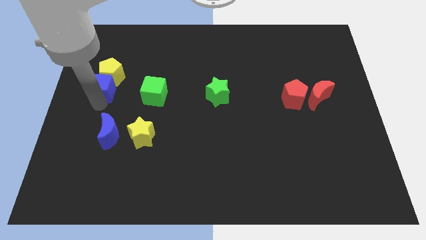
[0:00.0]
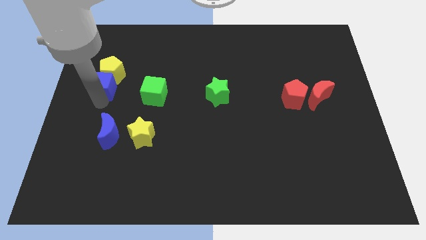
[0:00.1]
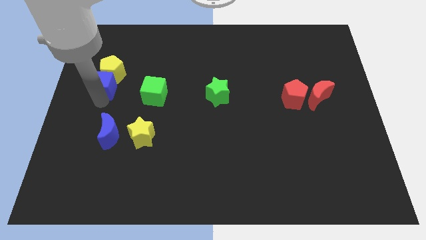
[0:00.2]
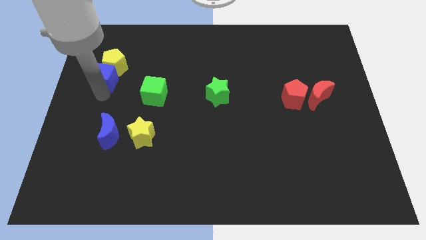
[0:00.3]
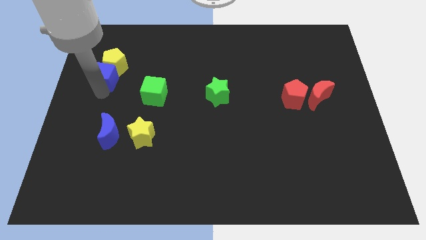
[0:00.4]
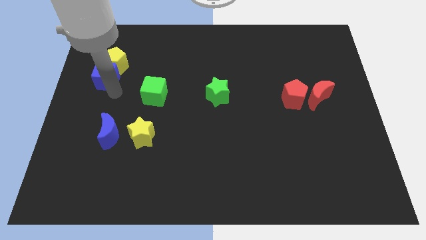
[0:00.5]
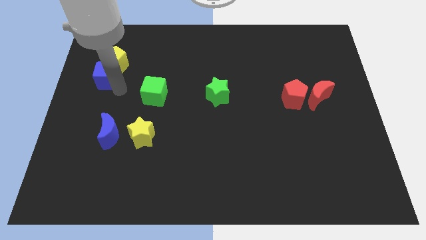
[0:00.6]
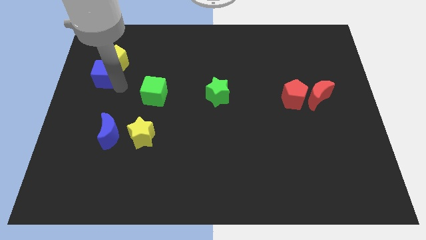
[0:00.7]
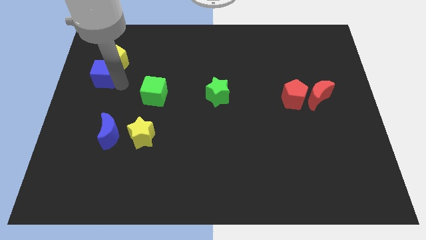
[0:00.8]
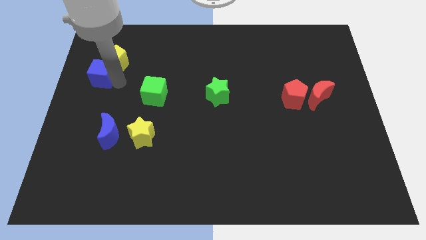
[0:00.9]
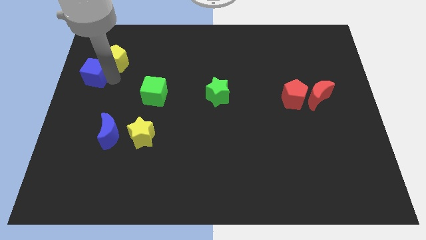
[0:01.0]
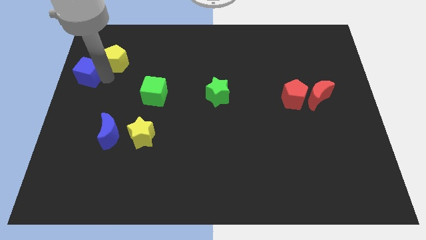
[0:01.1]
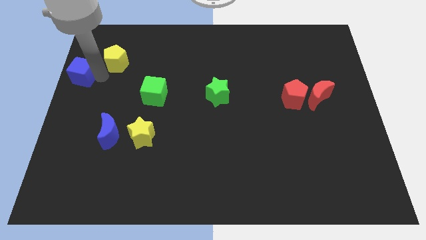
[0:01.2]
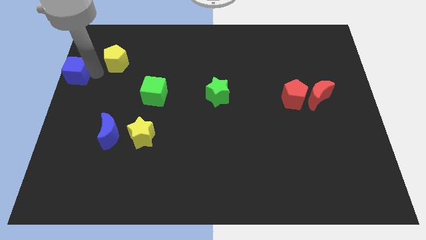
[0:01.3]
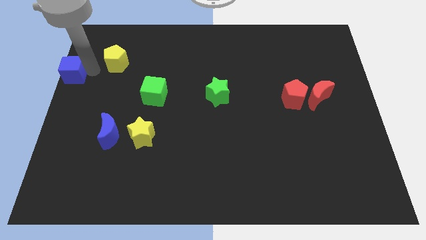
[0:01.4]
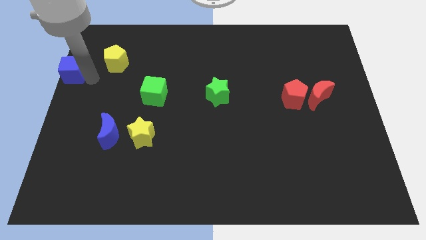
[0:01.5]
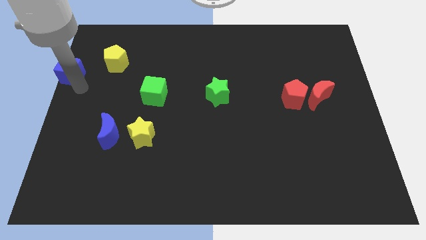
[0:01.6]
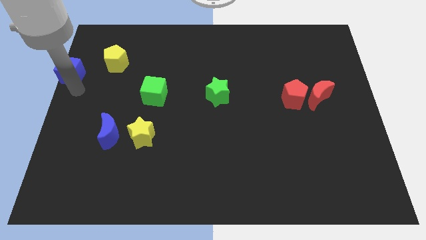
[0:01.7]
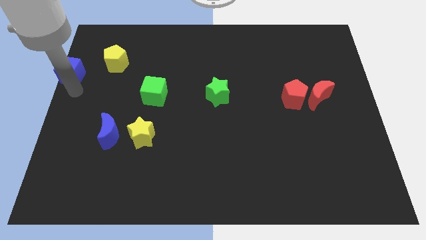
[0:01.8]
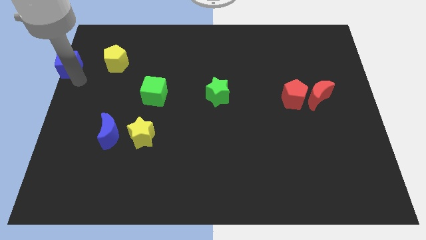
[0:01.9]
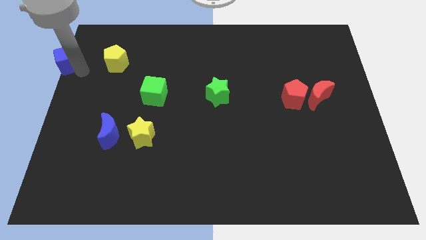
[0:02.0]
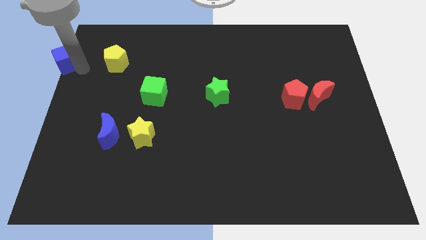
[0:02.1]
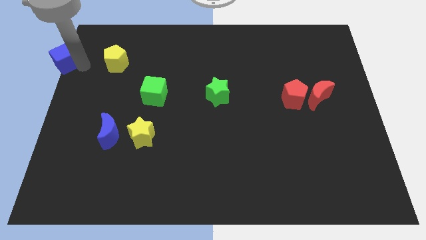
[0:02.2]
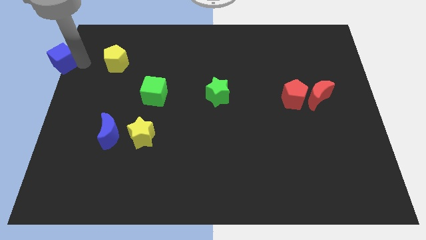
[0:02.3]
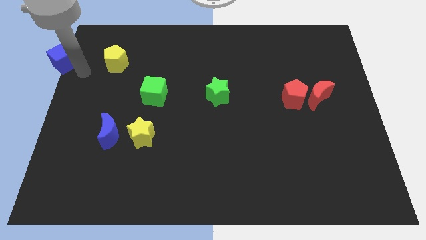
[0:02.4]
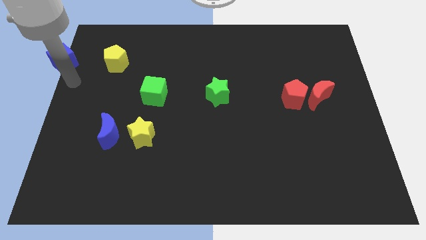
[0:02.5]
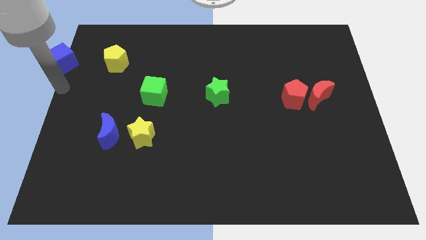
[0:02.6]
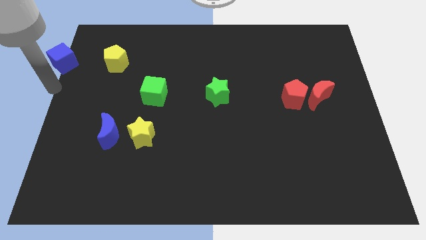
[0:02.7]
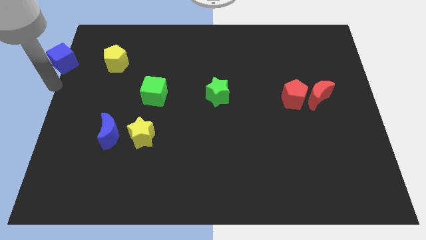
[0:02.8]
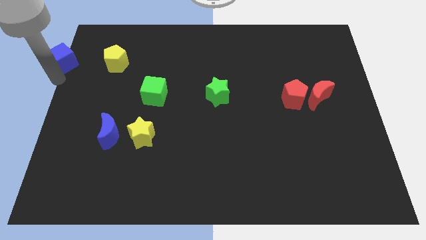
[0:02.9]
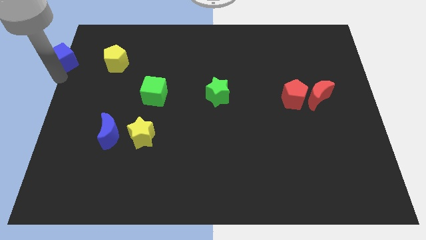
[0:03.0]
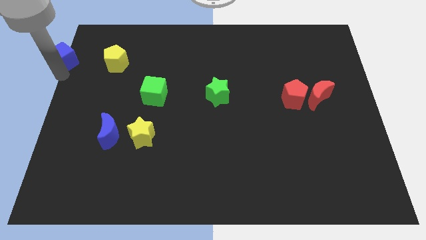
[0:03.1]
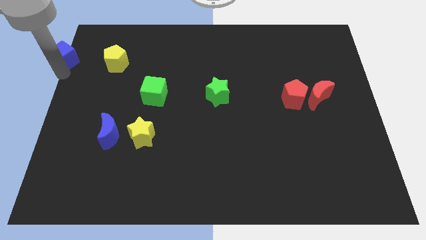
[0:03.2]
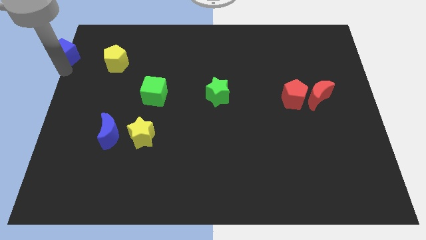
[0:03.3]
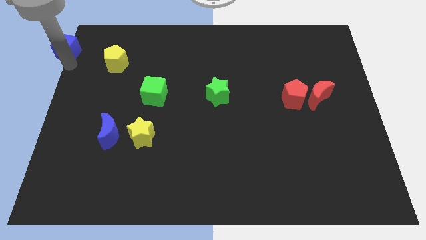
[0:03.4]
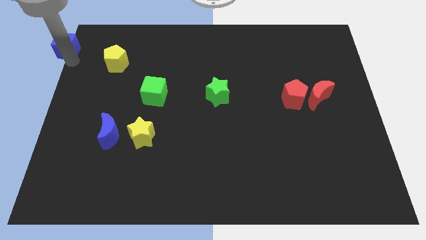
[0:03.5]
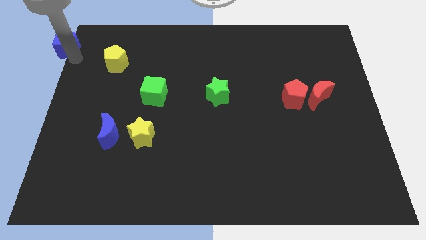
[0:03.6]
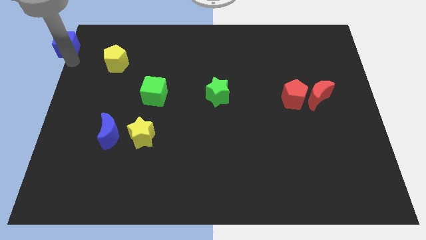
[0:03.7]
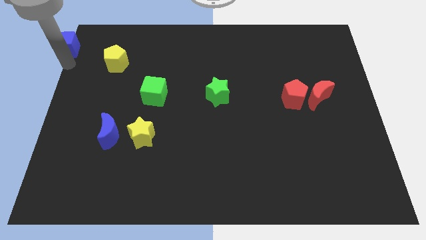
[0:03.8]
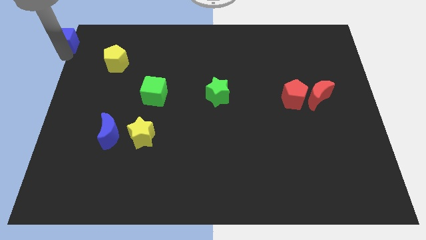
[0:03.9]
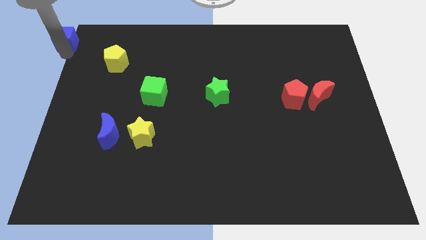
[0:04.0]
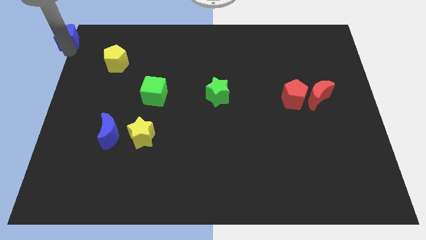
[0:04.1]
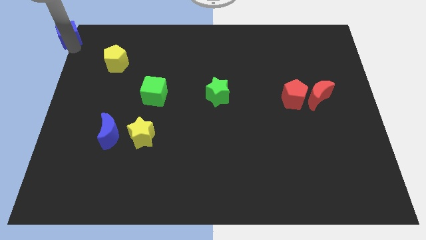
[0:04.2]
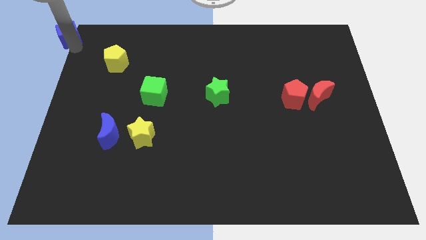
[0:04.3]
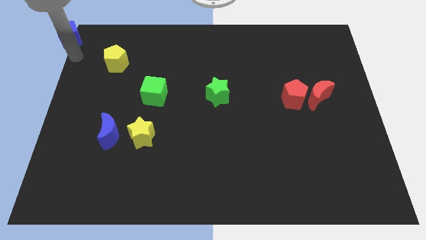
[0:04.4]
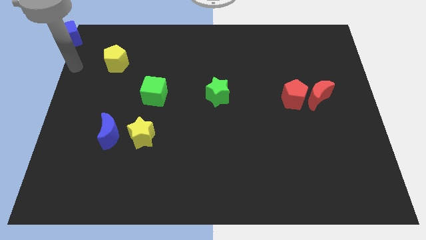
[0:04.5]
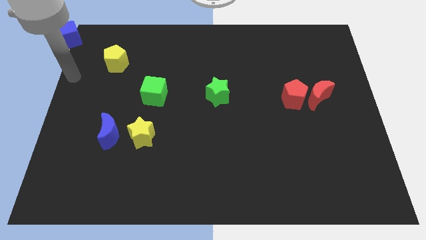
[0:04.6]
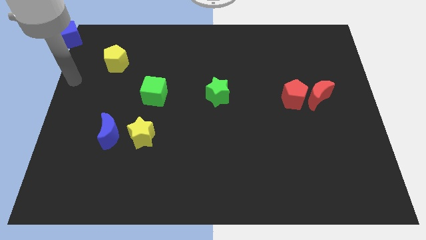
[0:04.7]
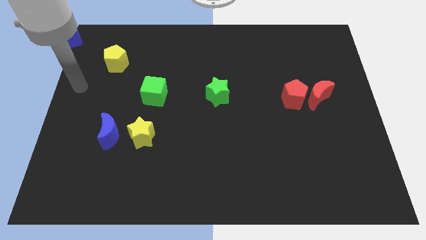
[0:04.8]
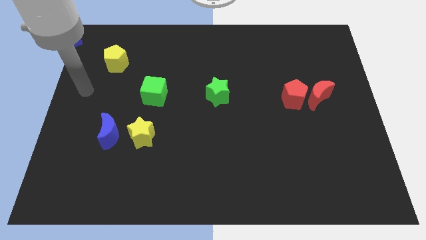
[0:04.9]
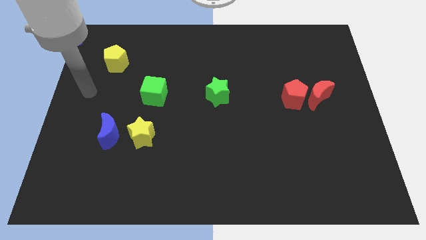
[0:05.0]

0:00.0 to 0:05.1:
move blue cube top left of the board

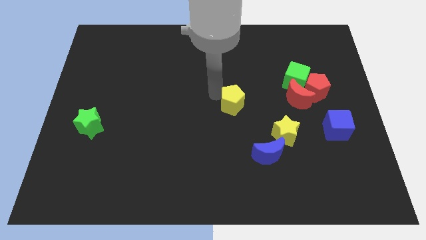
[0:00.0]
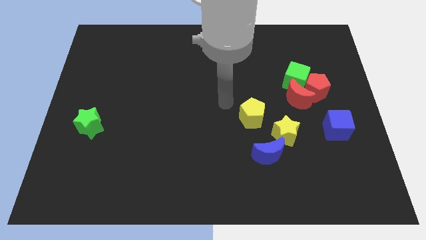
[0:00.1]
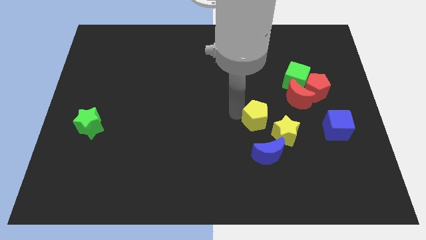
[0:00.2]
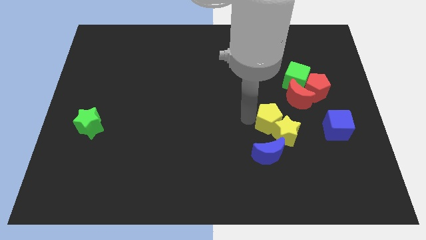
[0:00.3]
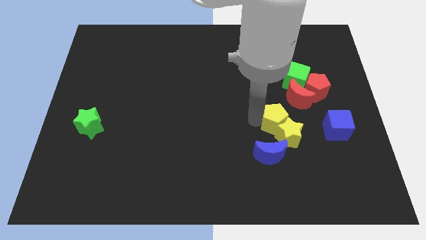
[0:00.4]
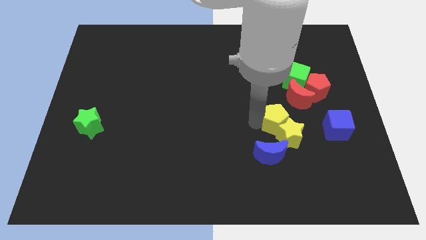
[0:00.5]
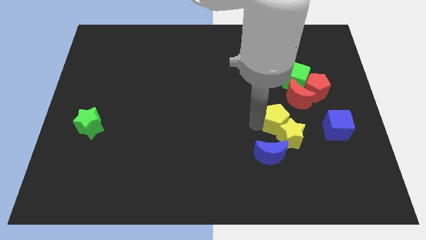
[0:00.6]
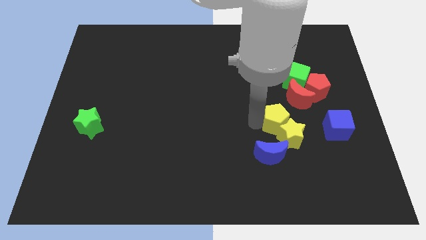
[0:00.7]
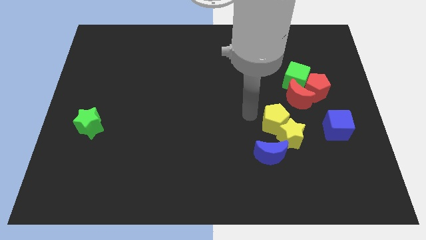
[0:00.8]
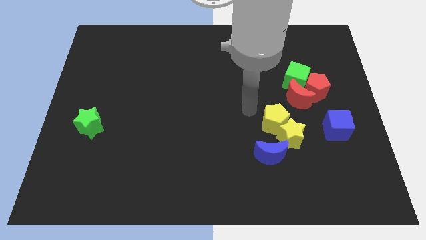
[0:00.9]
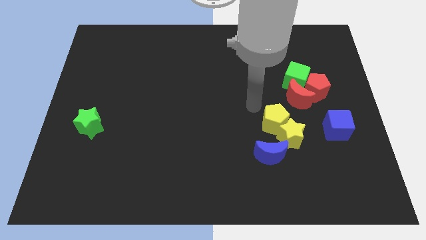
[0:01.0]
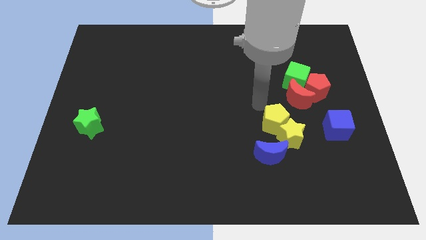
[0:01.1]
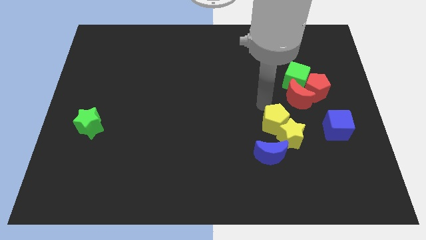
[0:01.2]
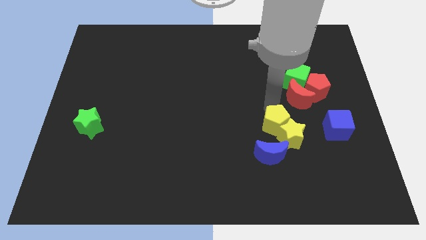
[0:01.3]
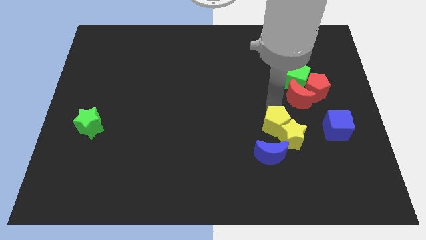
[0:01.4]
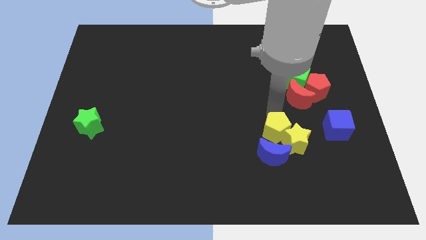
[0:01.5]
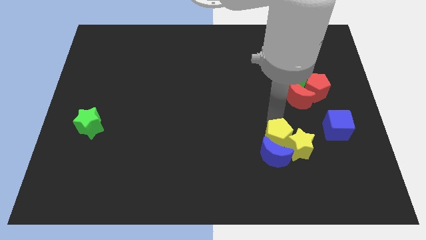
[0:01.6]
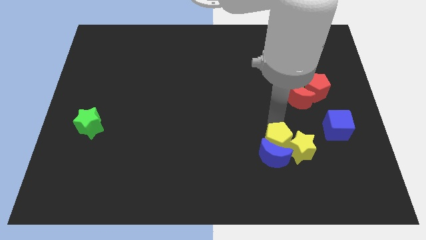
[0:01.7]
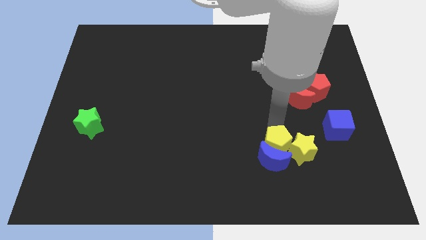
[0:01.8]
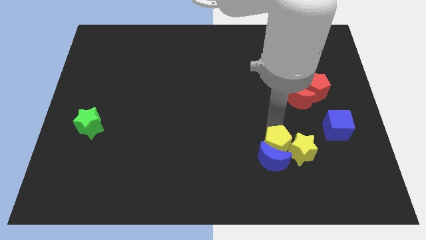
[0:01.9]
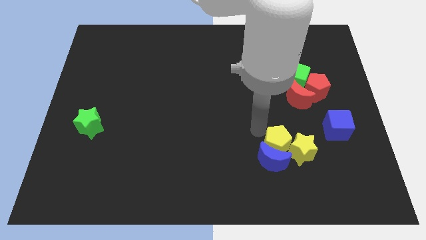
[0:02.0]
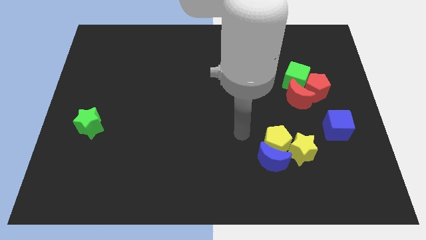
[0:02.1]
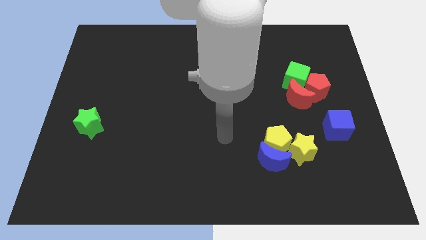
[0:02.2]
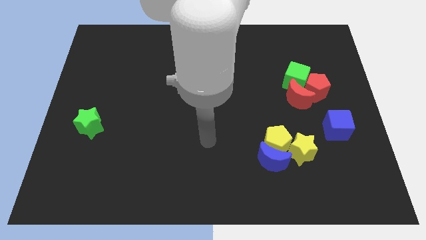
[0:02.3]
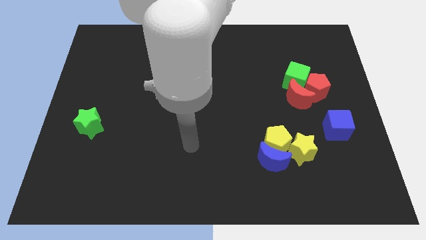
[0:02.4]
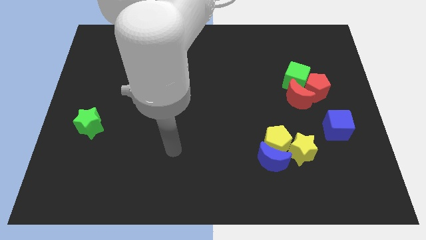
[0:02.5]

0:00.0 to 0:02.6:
move yellow blocks into blue crescent

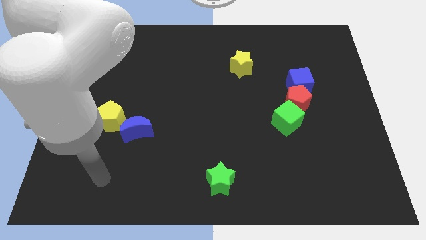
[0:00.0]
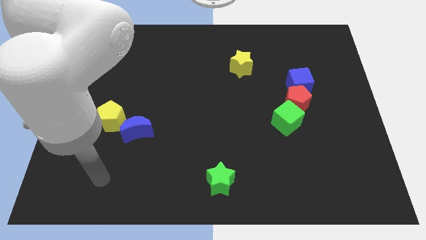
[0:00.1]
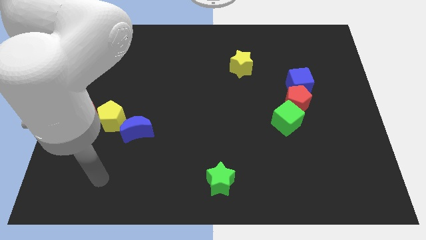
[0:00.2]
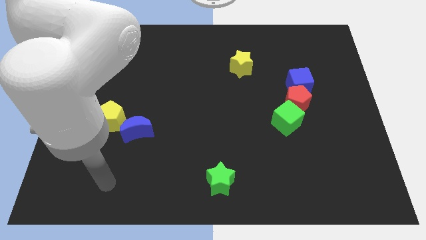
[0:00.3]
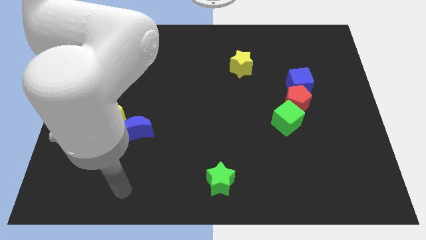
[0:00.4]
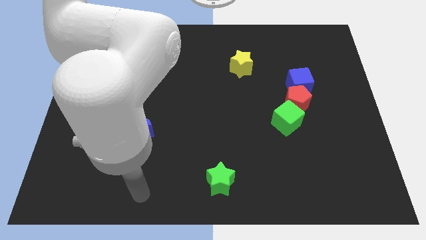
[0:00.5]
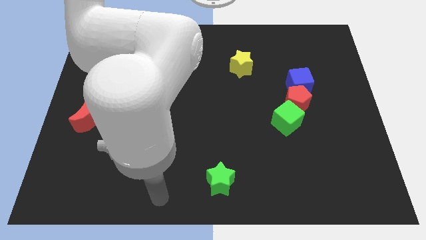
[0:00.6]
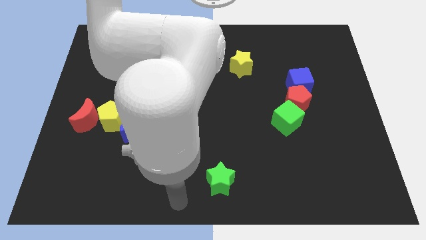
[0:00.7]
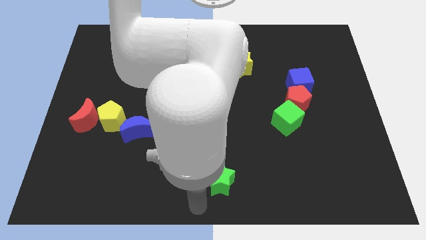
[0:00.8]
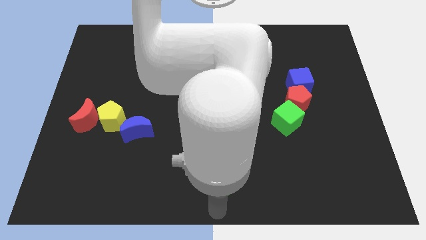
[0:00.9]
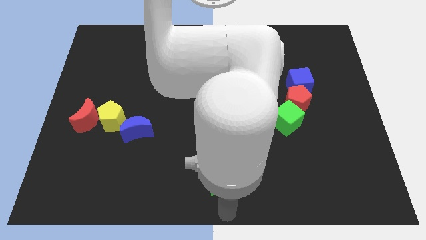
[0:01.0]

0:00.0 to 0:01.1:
point your arm at the bottom side of the green star

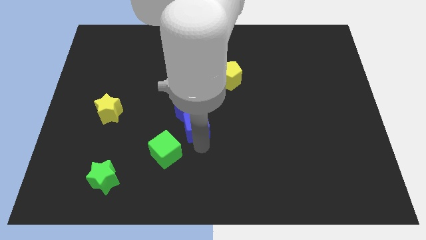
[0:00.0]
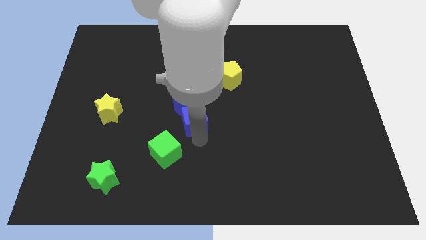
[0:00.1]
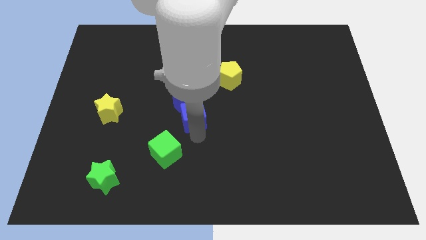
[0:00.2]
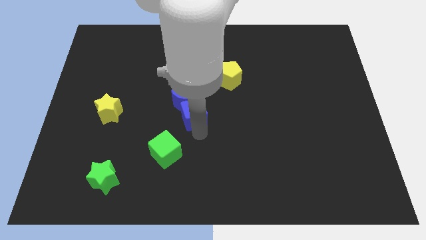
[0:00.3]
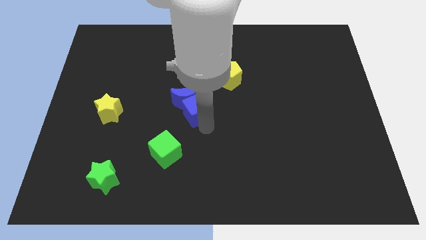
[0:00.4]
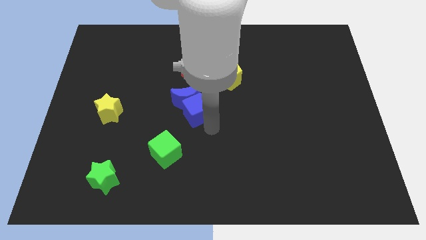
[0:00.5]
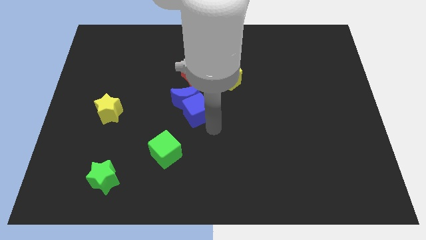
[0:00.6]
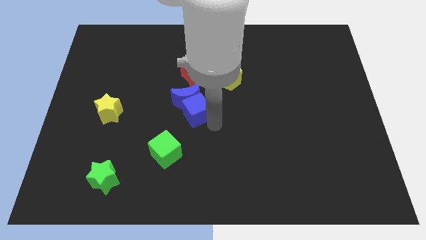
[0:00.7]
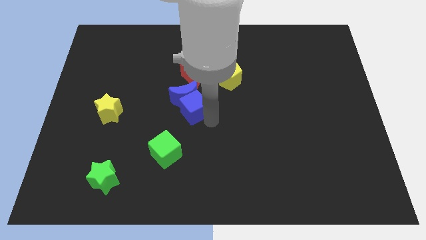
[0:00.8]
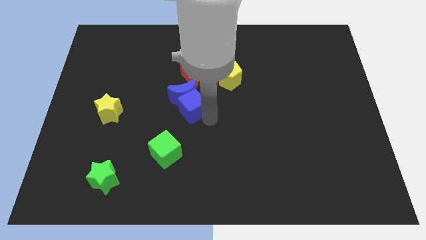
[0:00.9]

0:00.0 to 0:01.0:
move blue blocks at center
